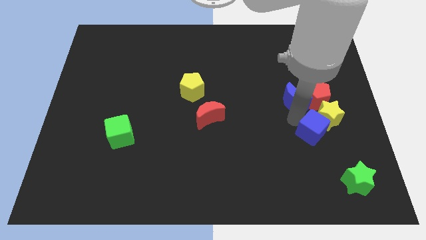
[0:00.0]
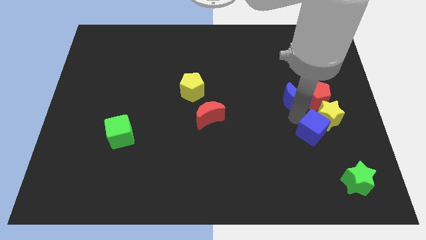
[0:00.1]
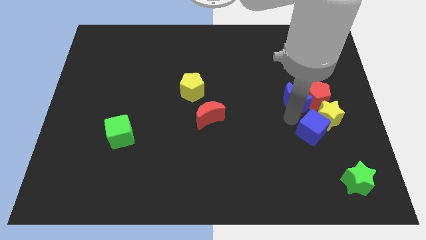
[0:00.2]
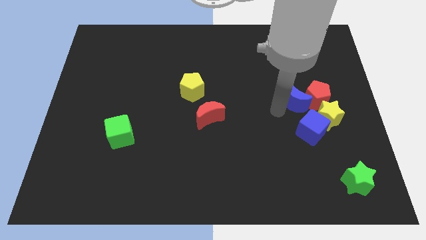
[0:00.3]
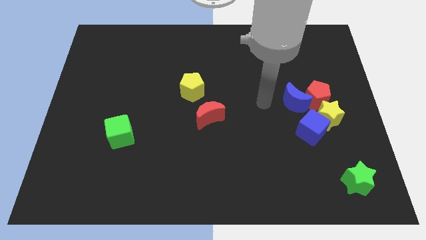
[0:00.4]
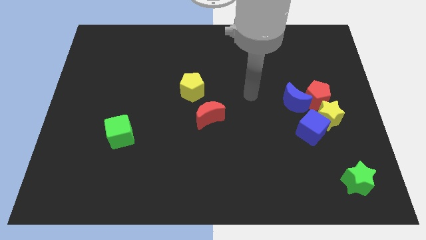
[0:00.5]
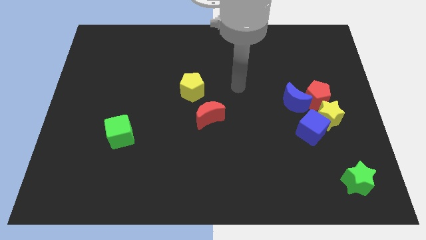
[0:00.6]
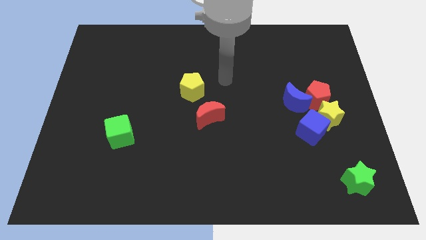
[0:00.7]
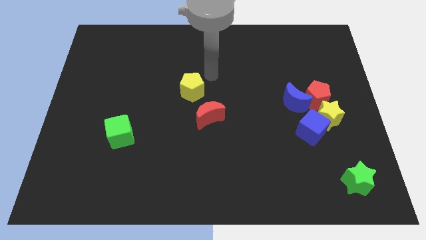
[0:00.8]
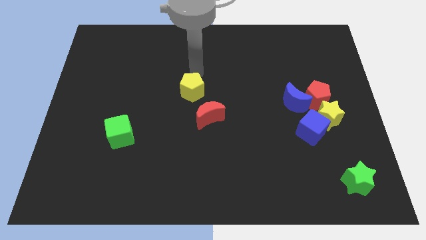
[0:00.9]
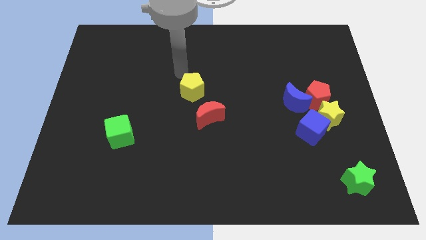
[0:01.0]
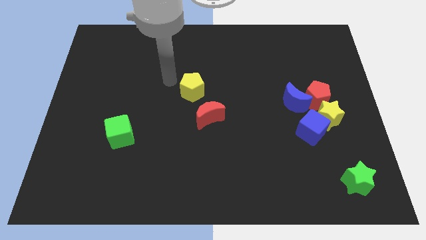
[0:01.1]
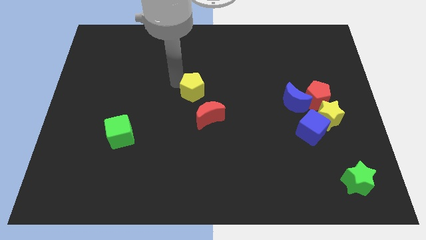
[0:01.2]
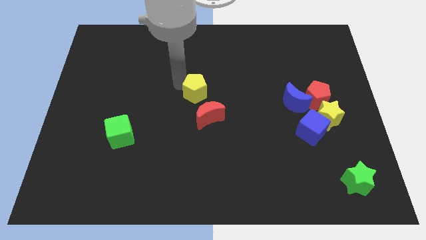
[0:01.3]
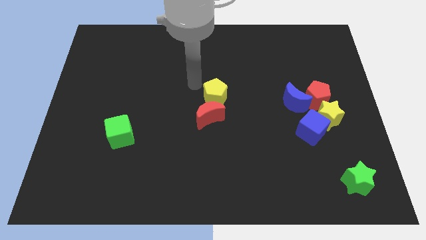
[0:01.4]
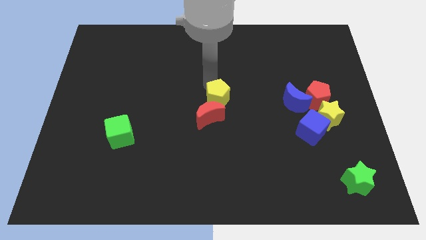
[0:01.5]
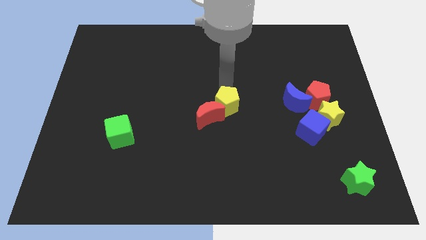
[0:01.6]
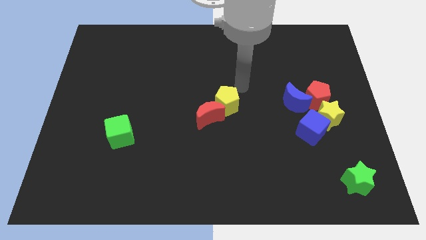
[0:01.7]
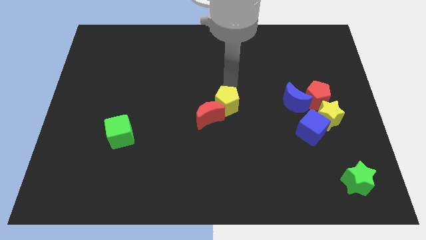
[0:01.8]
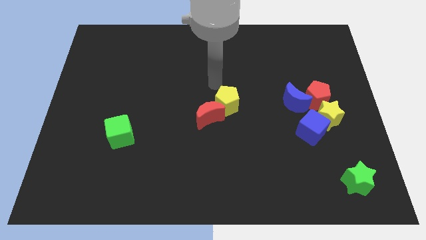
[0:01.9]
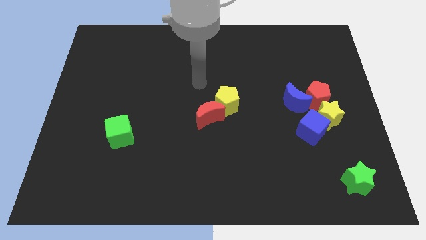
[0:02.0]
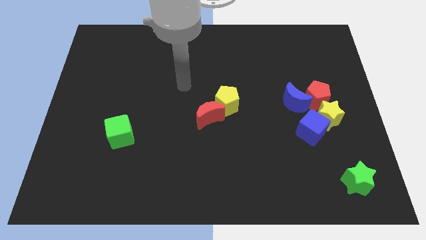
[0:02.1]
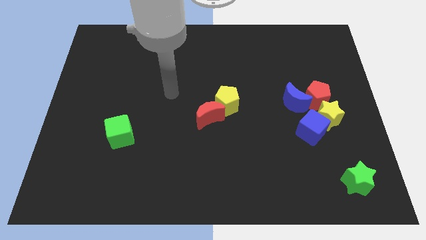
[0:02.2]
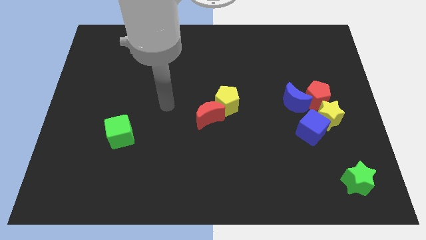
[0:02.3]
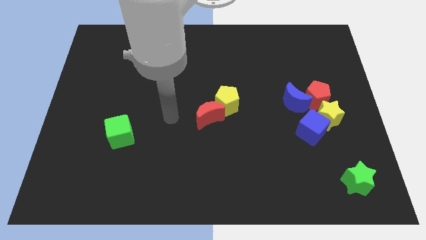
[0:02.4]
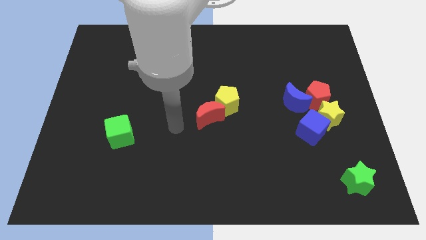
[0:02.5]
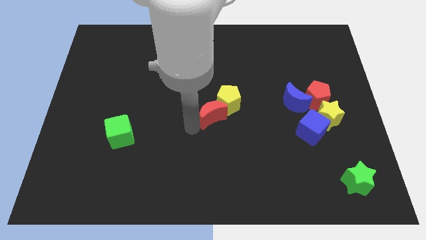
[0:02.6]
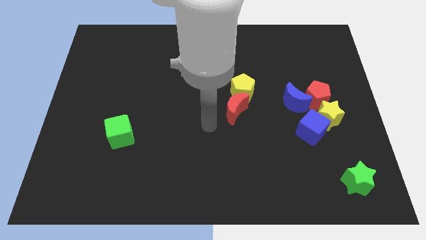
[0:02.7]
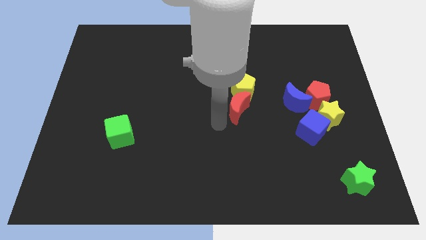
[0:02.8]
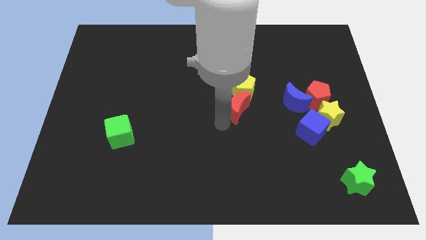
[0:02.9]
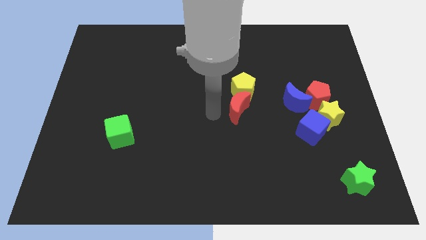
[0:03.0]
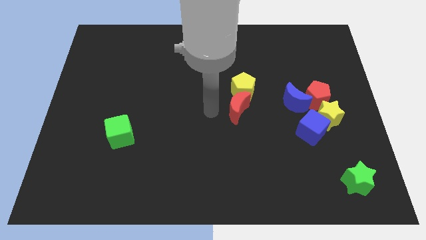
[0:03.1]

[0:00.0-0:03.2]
place the yellow pentagon at top right side of the red crescent

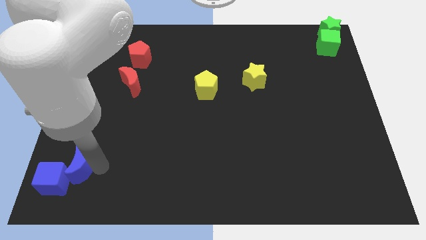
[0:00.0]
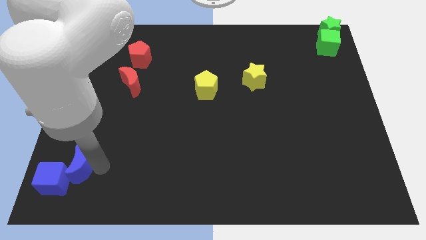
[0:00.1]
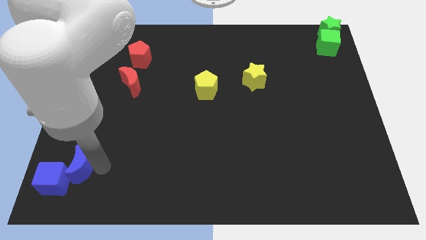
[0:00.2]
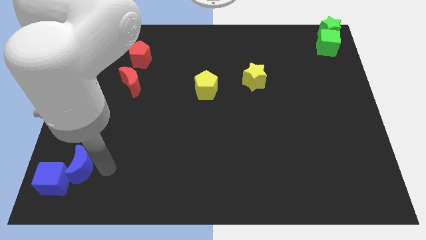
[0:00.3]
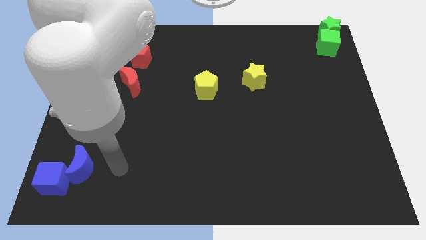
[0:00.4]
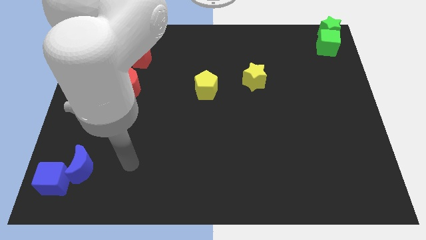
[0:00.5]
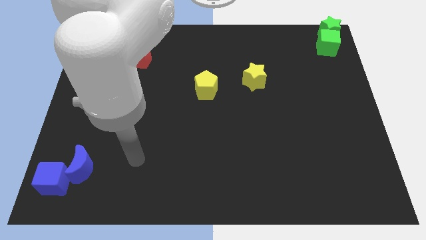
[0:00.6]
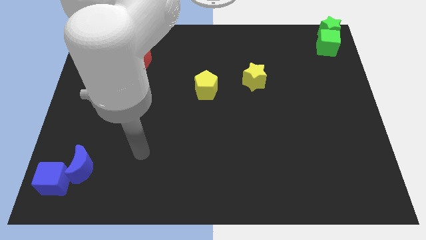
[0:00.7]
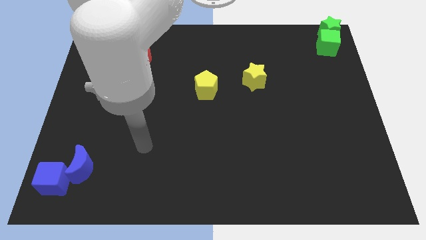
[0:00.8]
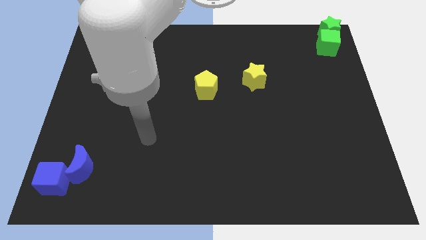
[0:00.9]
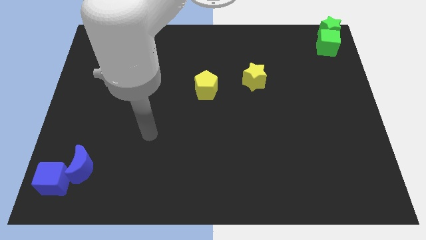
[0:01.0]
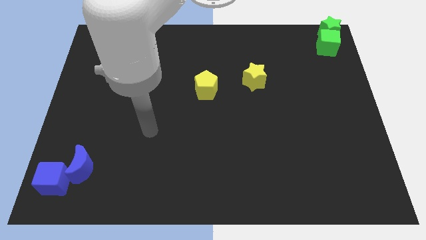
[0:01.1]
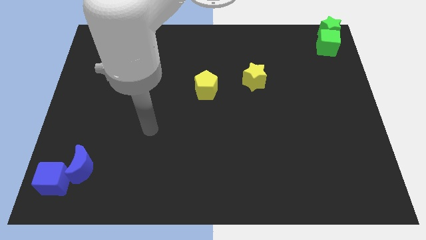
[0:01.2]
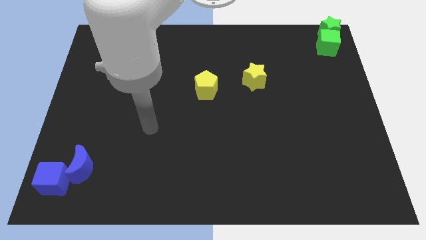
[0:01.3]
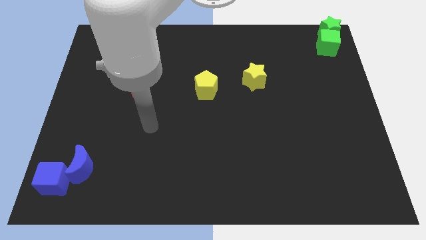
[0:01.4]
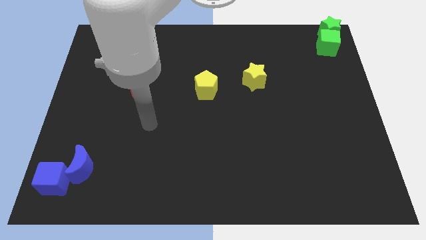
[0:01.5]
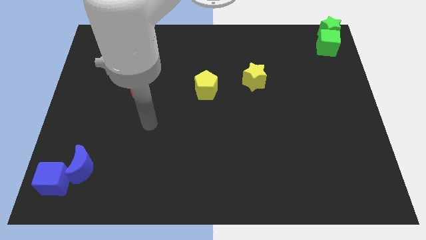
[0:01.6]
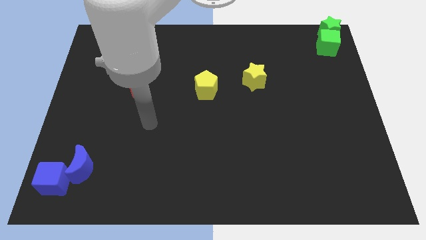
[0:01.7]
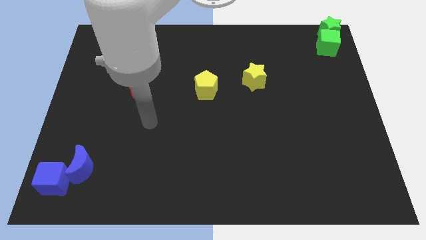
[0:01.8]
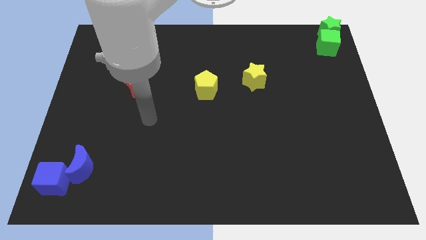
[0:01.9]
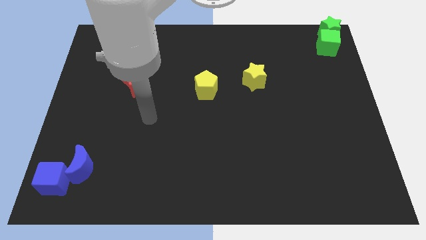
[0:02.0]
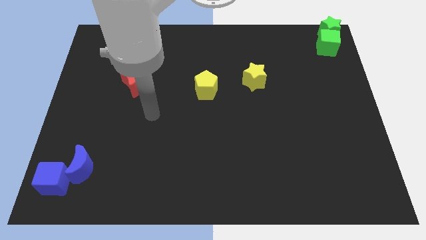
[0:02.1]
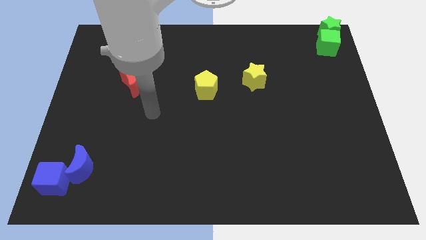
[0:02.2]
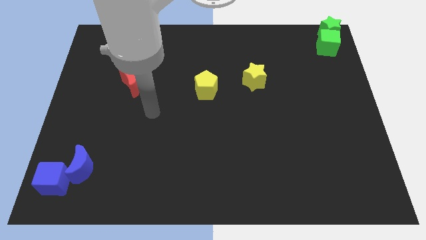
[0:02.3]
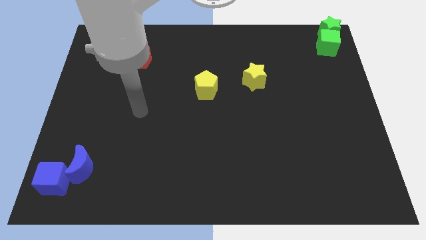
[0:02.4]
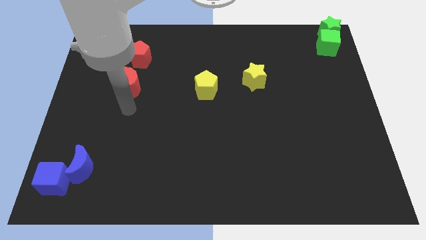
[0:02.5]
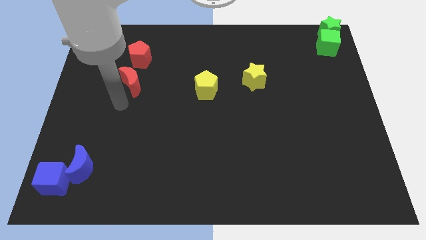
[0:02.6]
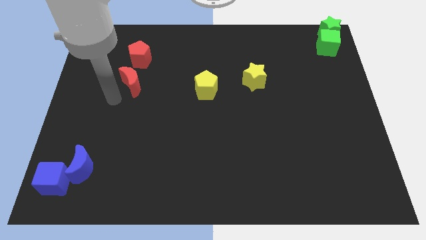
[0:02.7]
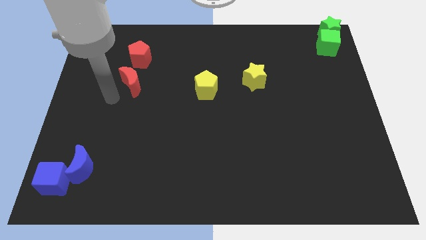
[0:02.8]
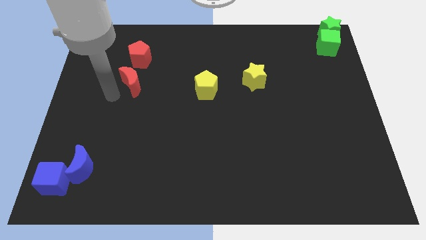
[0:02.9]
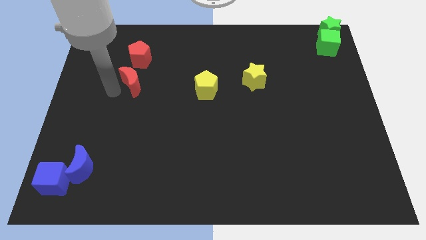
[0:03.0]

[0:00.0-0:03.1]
move your arm towards the red moon

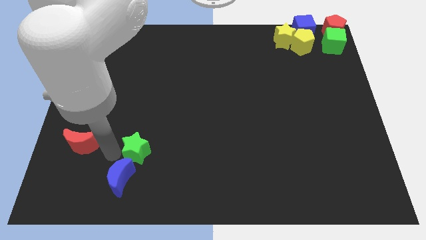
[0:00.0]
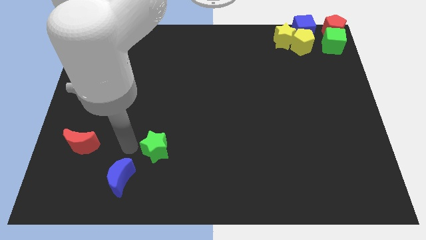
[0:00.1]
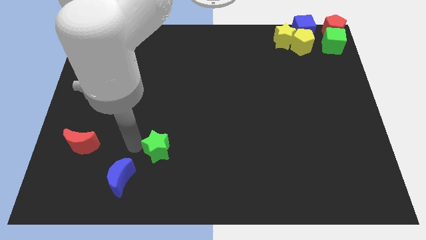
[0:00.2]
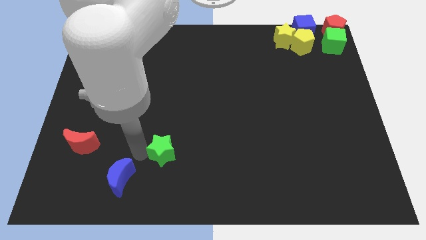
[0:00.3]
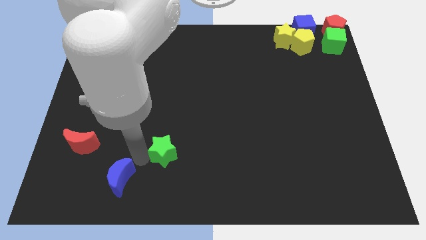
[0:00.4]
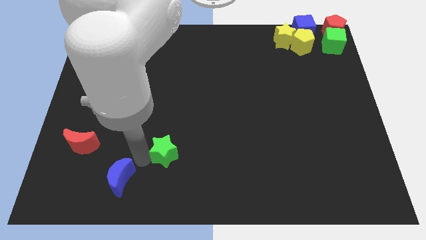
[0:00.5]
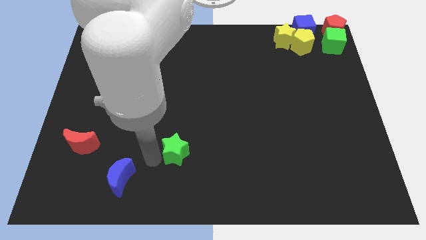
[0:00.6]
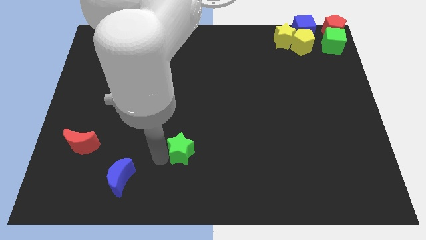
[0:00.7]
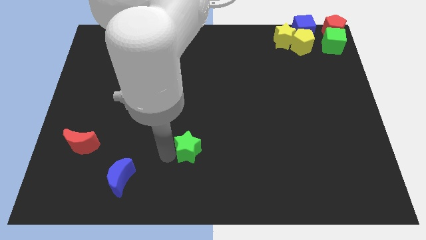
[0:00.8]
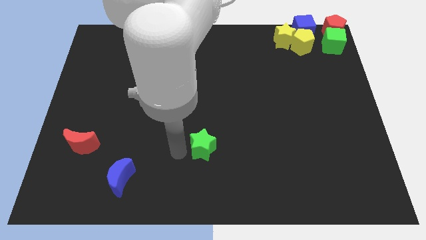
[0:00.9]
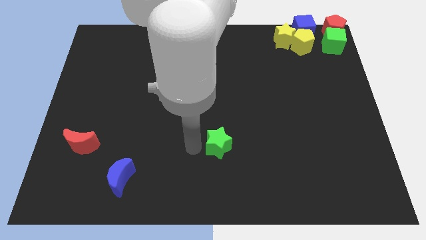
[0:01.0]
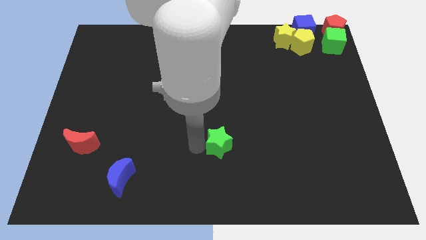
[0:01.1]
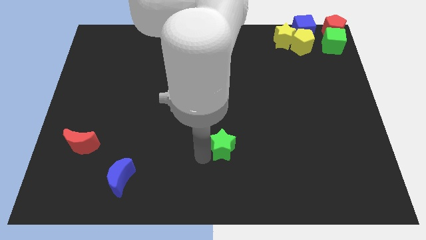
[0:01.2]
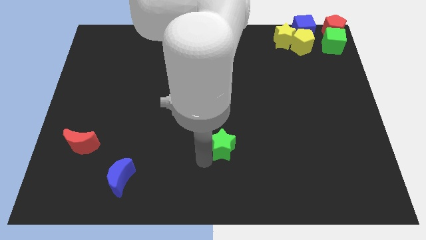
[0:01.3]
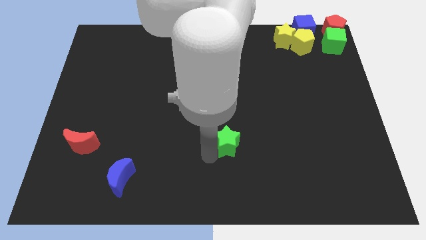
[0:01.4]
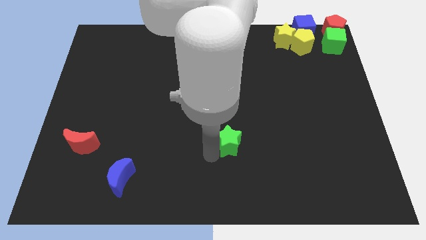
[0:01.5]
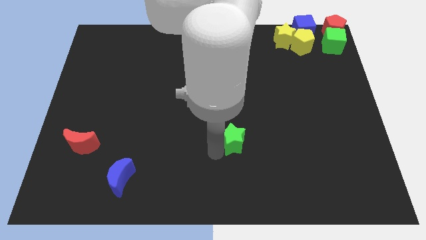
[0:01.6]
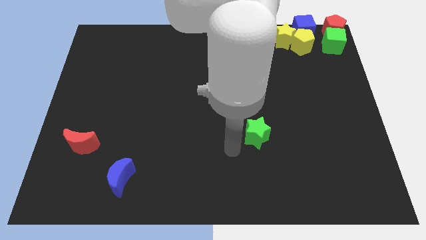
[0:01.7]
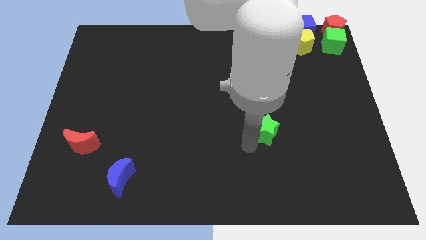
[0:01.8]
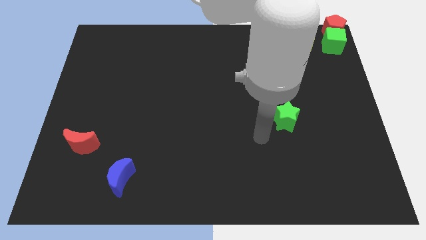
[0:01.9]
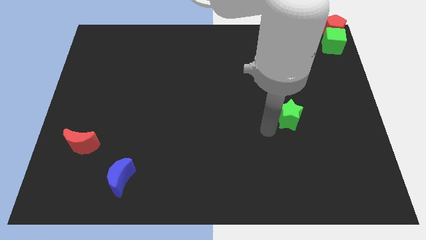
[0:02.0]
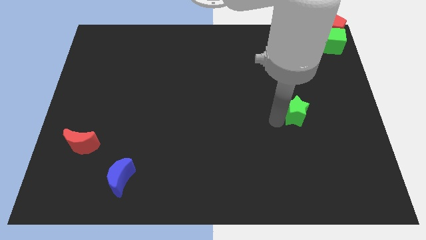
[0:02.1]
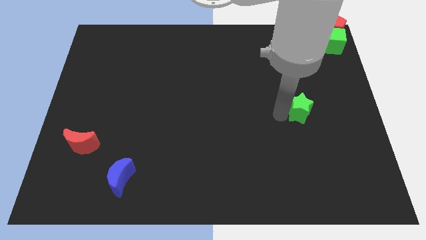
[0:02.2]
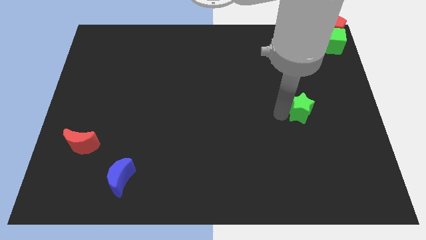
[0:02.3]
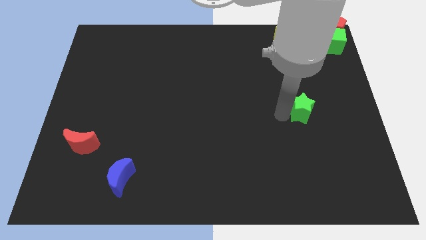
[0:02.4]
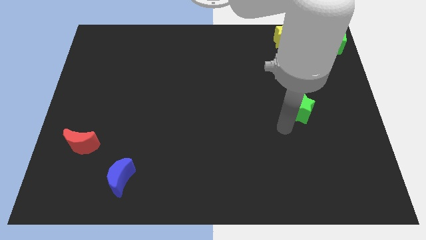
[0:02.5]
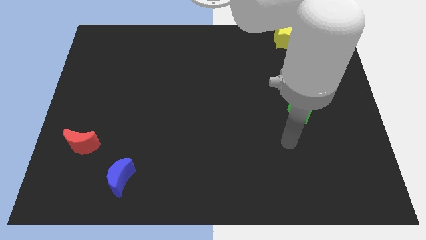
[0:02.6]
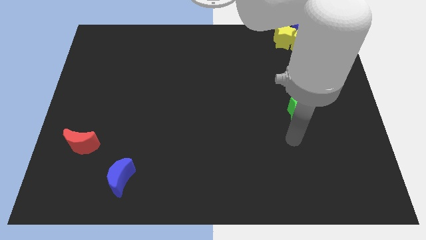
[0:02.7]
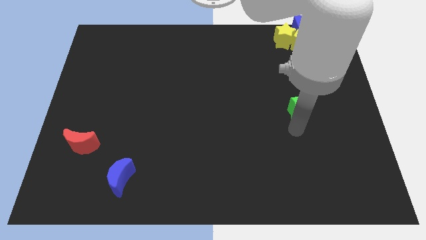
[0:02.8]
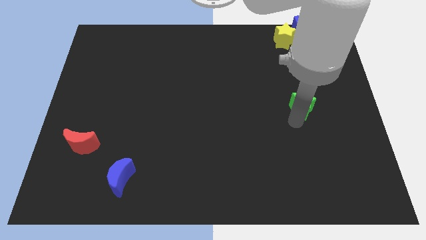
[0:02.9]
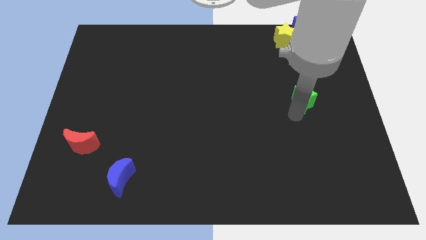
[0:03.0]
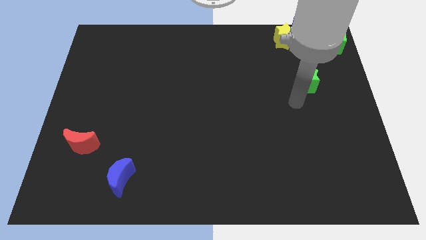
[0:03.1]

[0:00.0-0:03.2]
move the green star towards the center right of the board
